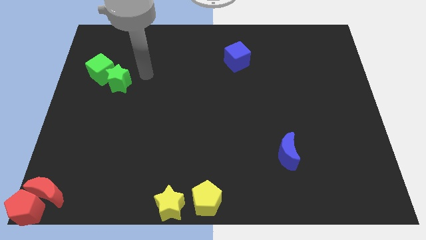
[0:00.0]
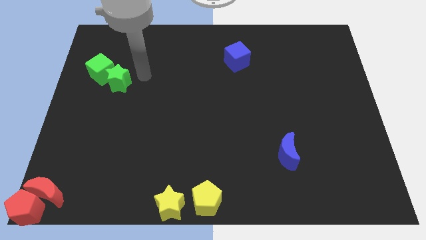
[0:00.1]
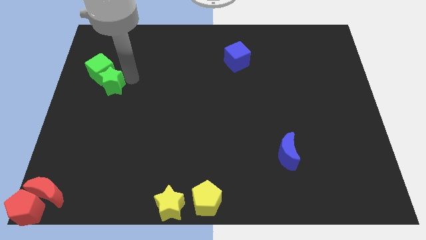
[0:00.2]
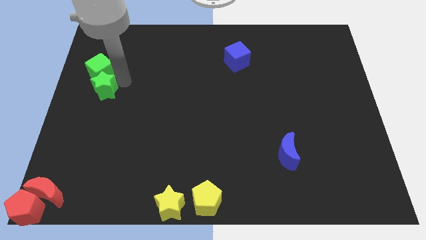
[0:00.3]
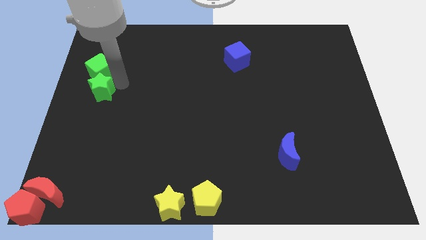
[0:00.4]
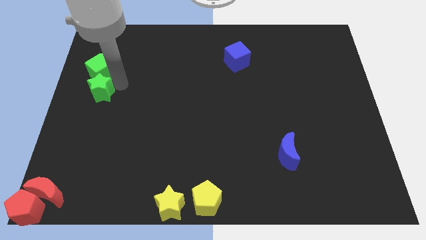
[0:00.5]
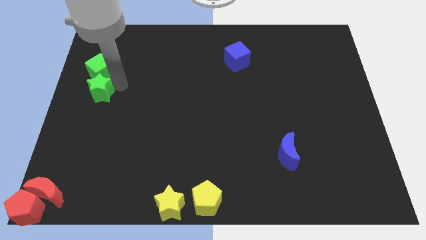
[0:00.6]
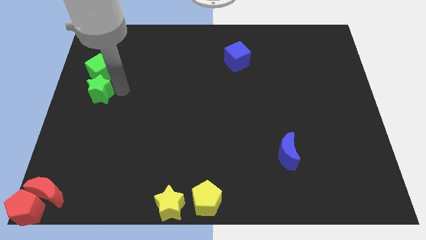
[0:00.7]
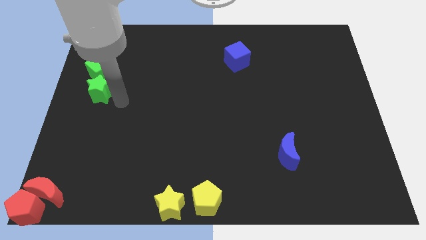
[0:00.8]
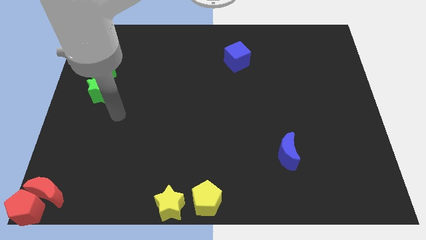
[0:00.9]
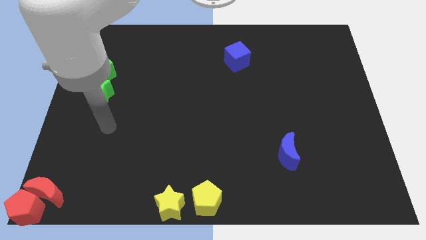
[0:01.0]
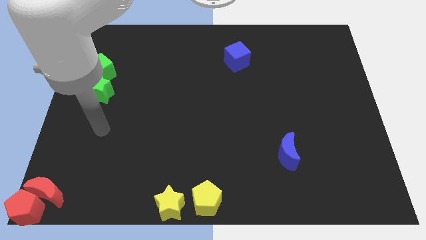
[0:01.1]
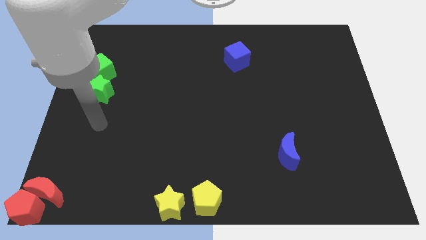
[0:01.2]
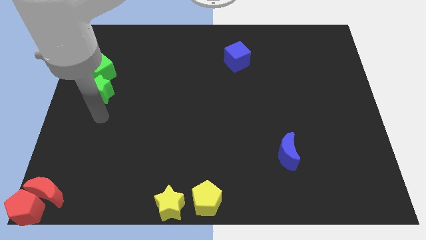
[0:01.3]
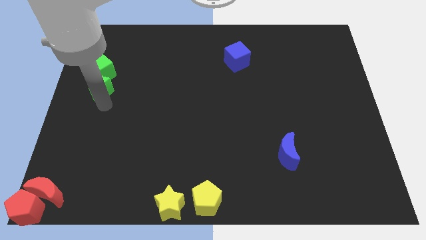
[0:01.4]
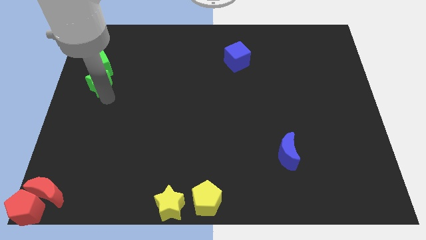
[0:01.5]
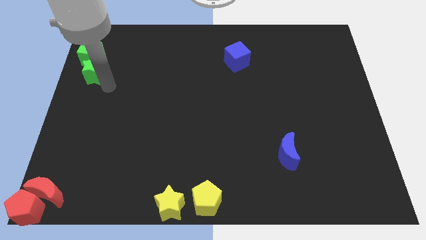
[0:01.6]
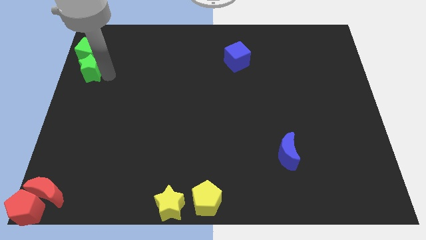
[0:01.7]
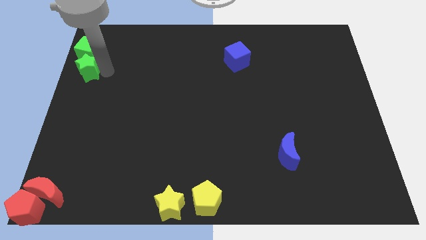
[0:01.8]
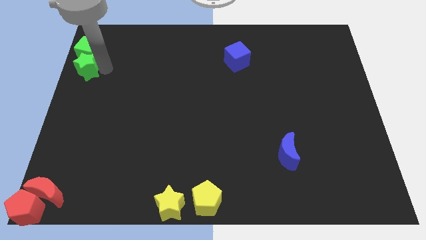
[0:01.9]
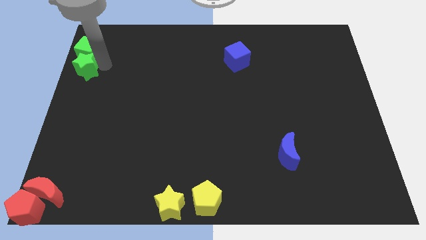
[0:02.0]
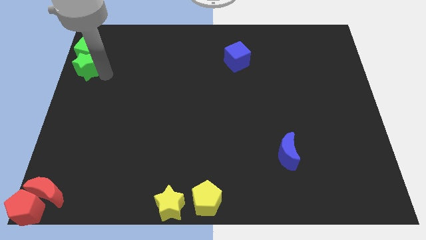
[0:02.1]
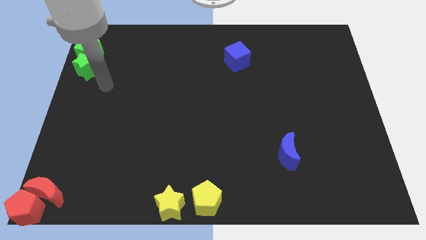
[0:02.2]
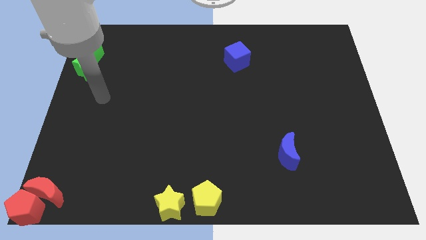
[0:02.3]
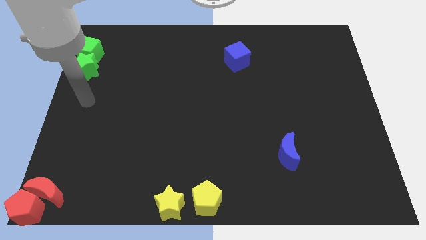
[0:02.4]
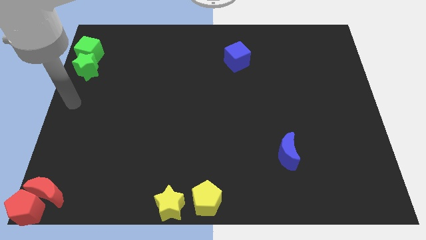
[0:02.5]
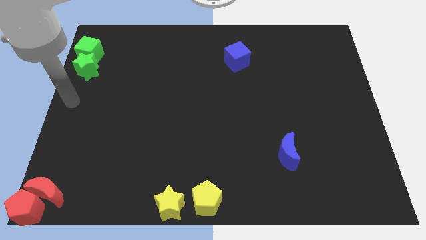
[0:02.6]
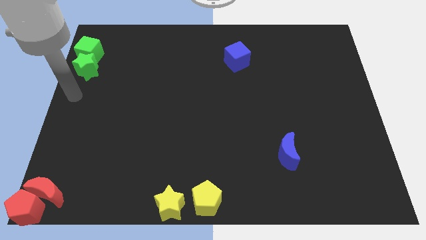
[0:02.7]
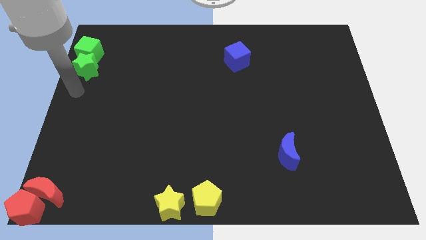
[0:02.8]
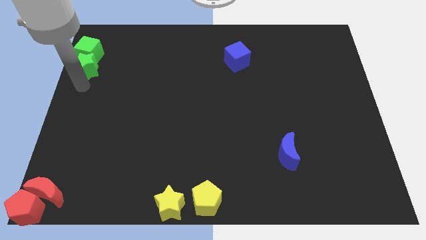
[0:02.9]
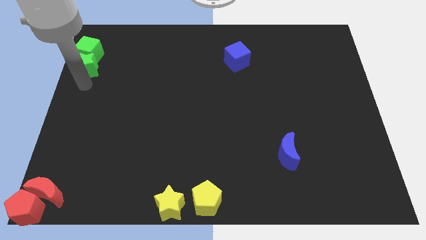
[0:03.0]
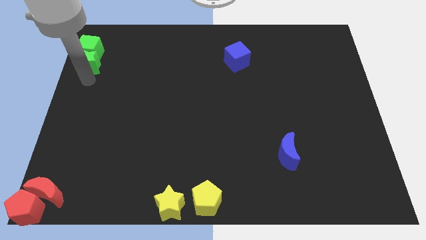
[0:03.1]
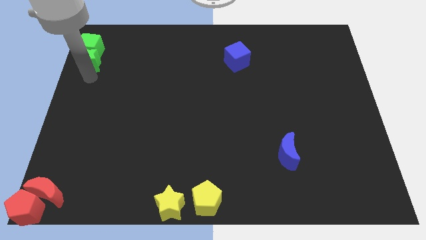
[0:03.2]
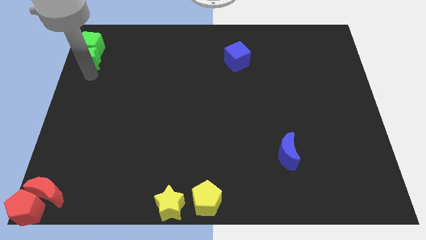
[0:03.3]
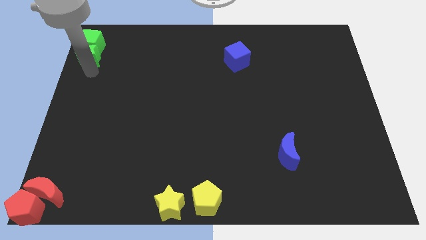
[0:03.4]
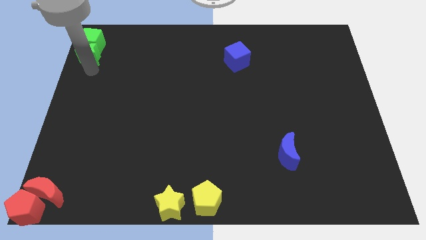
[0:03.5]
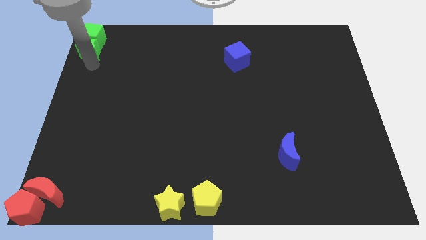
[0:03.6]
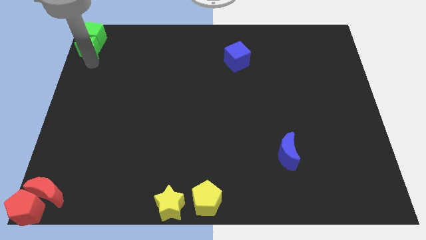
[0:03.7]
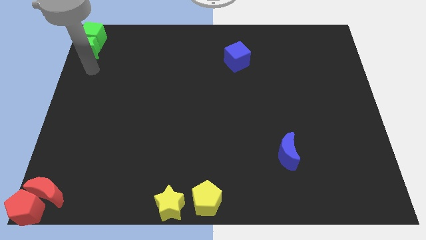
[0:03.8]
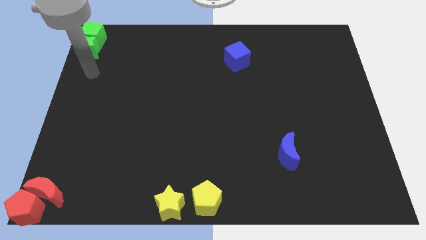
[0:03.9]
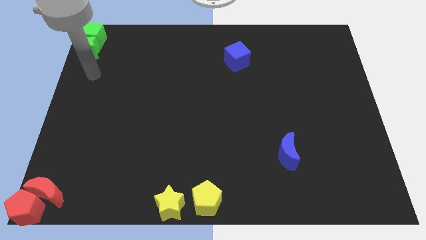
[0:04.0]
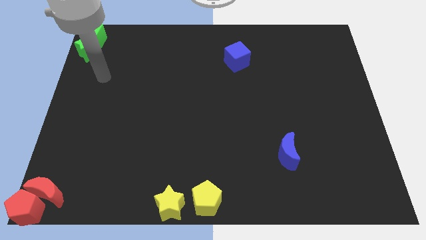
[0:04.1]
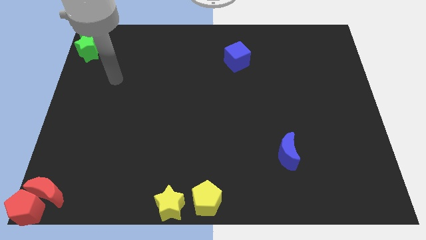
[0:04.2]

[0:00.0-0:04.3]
move the green cube to the top left corner with the green star

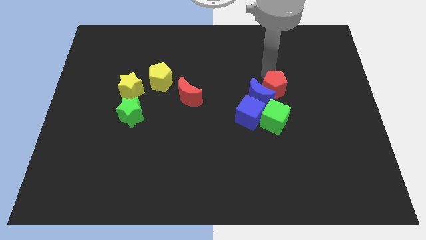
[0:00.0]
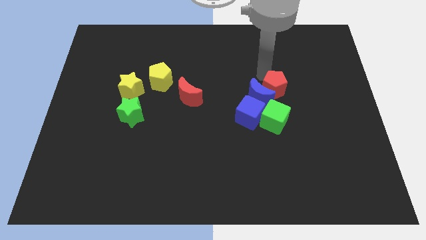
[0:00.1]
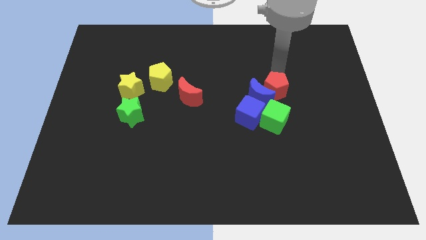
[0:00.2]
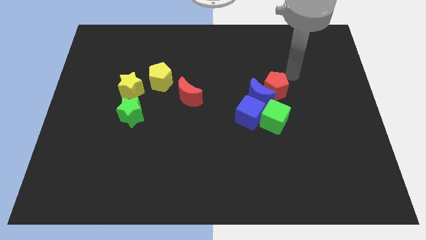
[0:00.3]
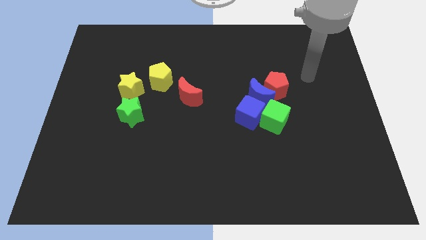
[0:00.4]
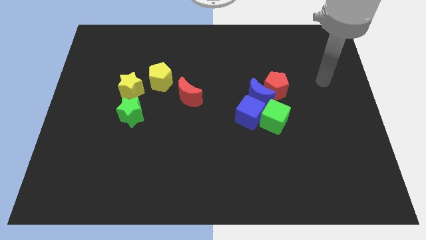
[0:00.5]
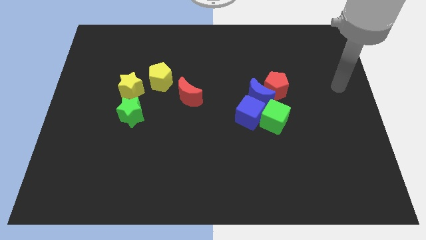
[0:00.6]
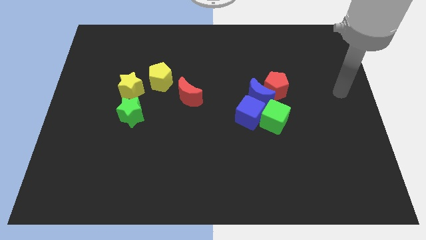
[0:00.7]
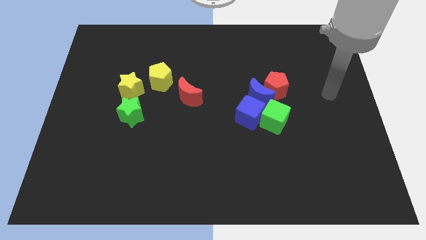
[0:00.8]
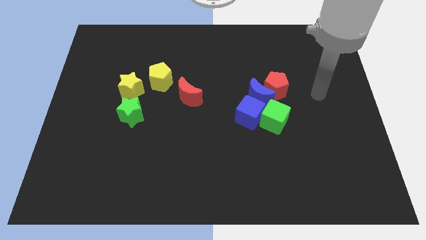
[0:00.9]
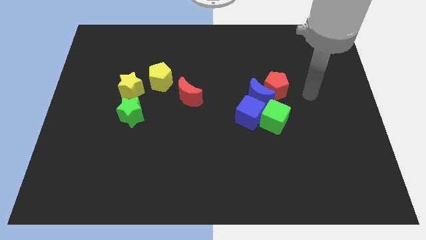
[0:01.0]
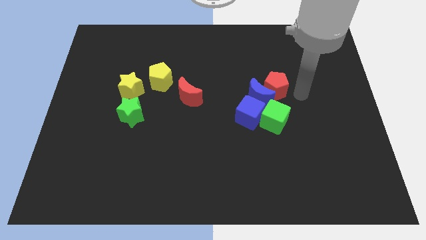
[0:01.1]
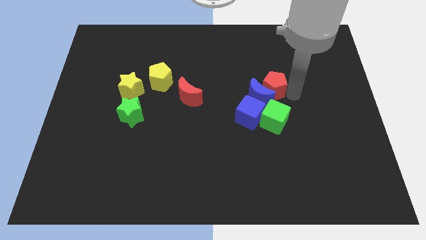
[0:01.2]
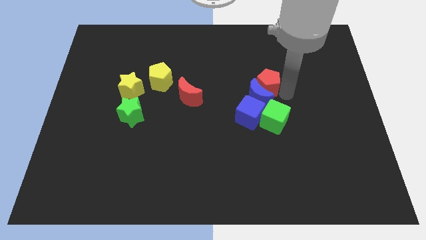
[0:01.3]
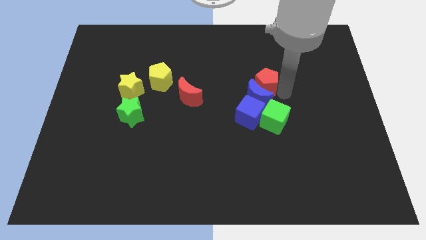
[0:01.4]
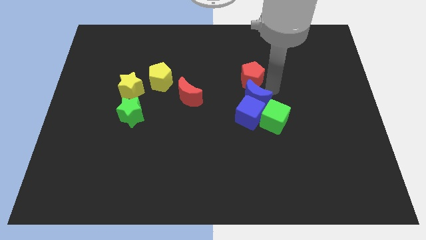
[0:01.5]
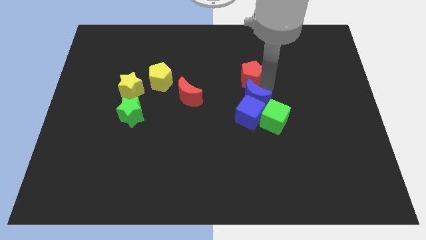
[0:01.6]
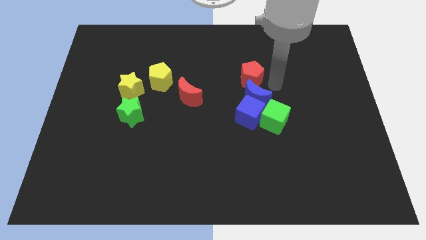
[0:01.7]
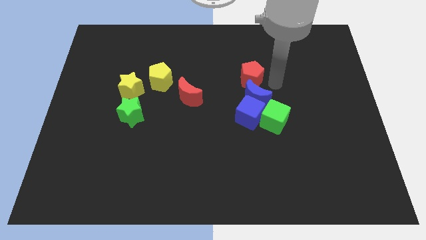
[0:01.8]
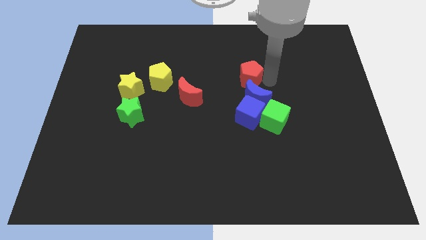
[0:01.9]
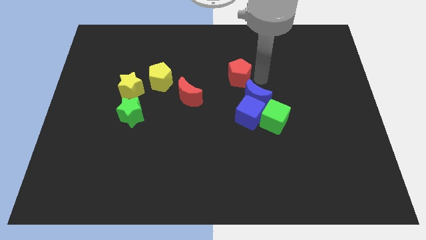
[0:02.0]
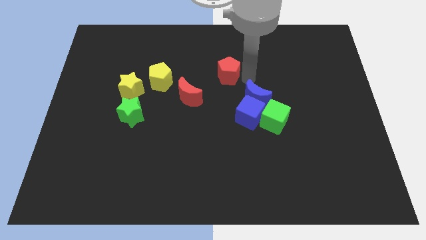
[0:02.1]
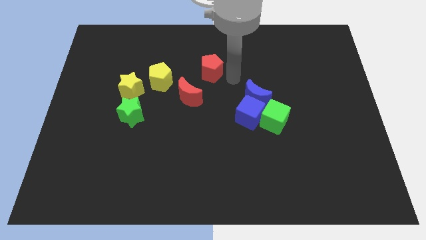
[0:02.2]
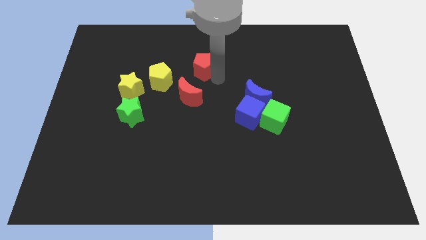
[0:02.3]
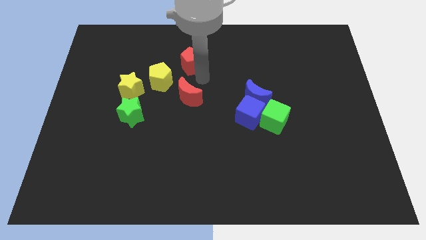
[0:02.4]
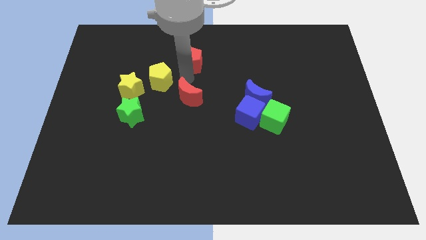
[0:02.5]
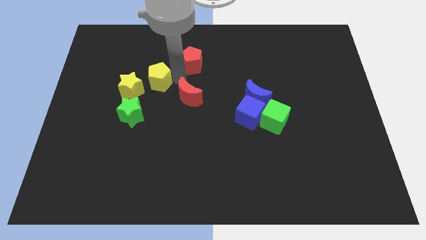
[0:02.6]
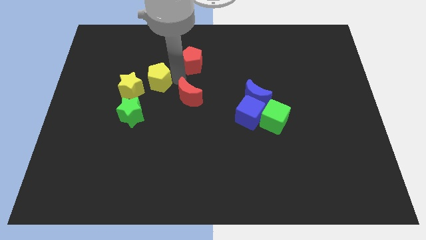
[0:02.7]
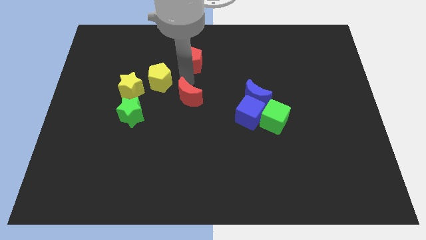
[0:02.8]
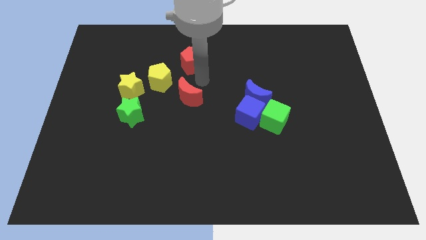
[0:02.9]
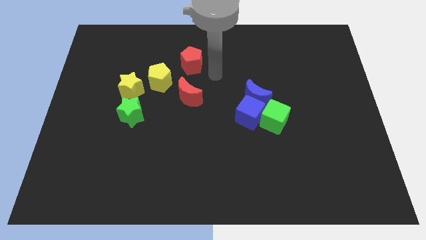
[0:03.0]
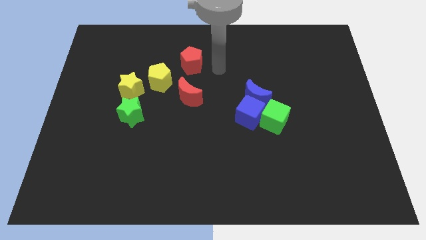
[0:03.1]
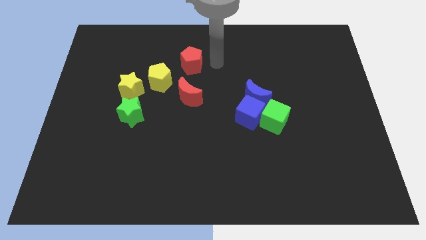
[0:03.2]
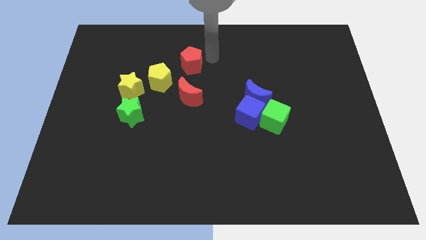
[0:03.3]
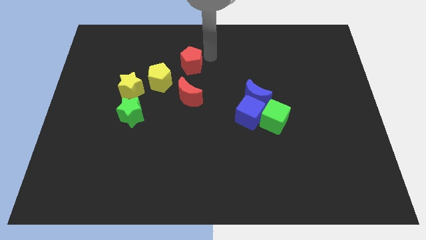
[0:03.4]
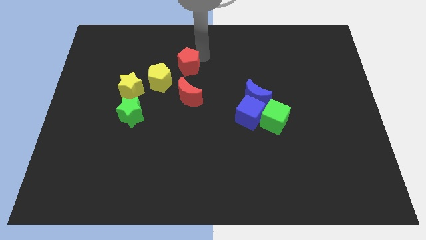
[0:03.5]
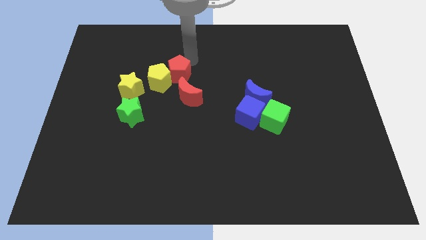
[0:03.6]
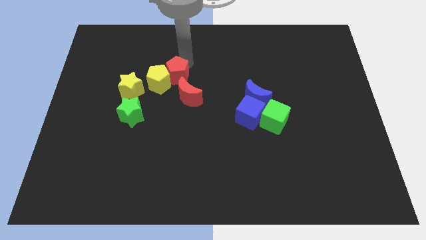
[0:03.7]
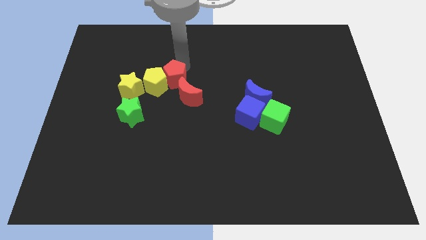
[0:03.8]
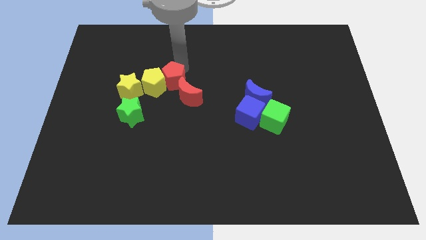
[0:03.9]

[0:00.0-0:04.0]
move red pentagon right of yellow pentagon

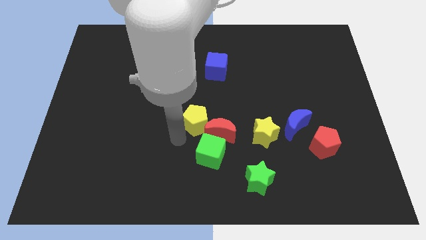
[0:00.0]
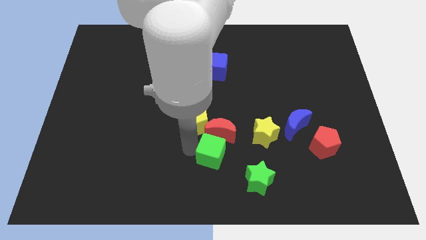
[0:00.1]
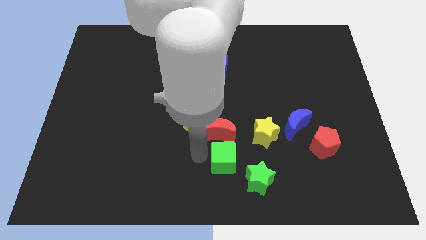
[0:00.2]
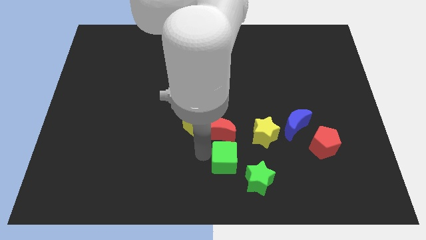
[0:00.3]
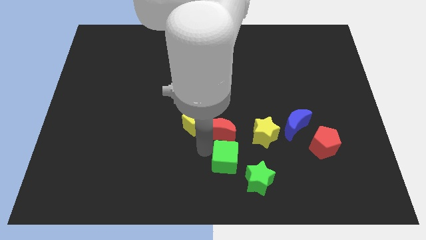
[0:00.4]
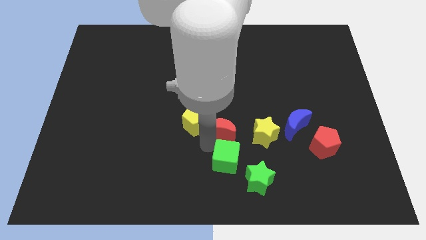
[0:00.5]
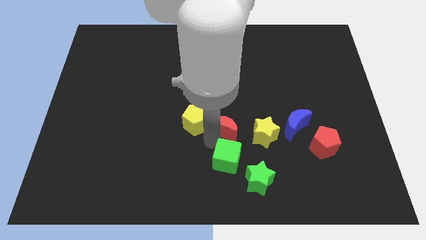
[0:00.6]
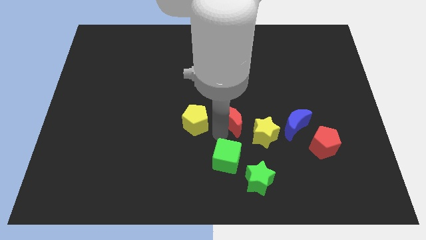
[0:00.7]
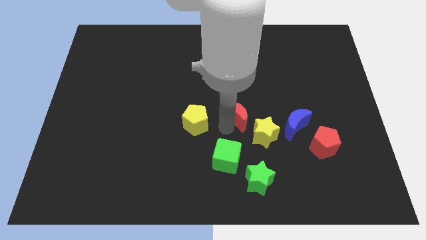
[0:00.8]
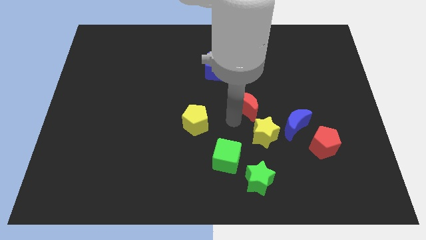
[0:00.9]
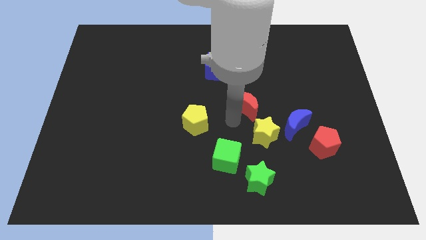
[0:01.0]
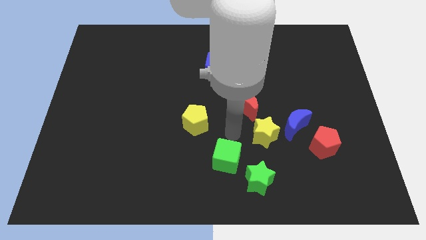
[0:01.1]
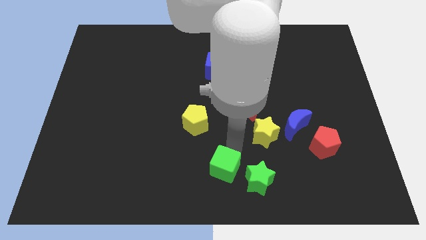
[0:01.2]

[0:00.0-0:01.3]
separate the red crescent from the green cube and yellow pentagon
